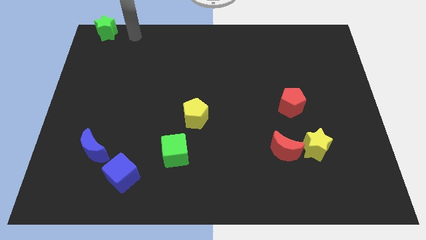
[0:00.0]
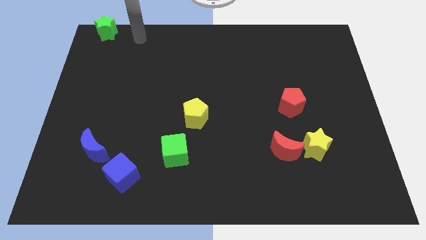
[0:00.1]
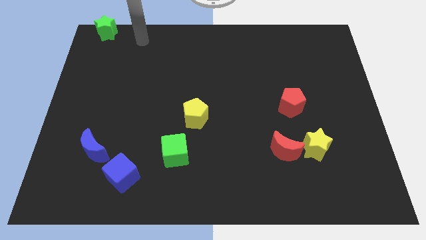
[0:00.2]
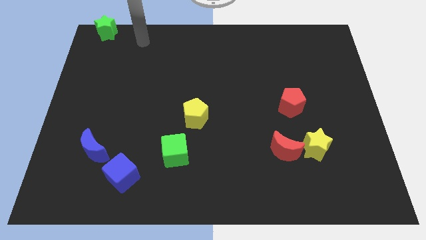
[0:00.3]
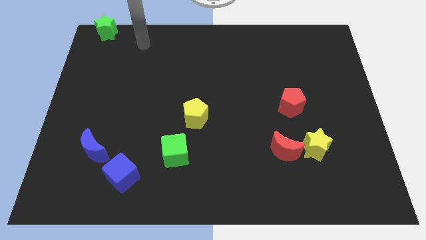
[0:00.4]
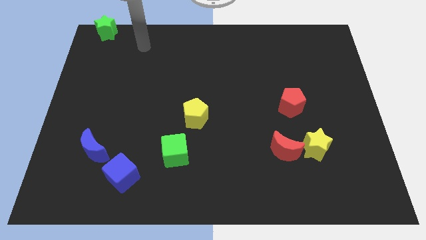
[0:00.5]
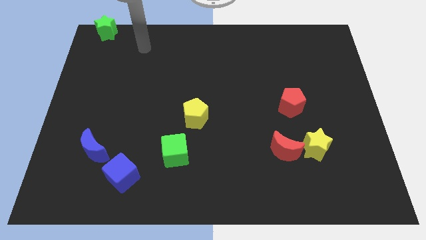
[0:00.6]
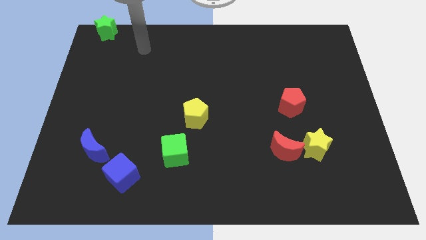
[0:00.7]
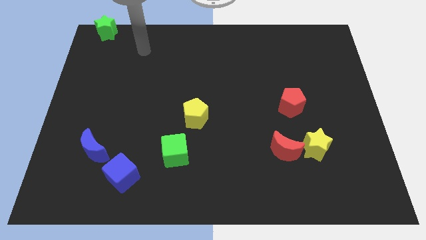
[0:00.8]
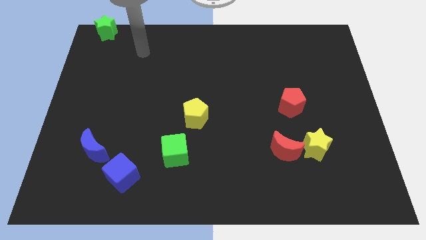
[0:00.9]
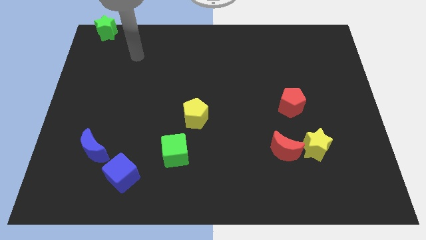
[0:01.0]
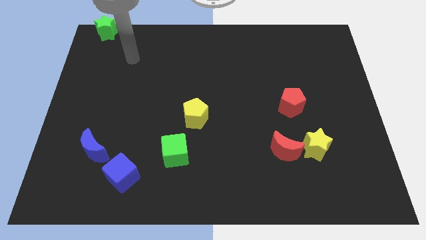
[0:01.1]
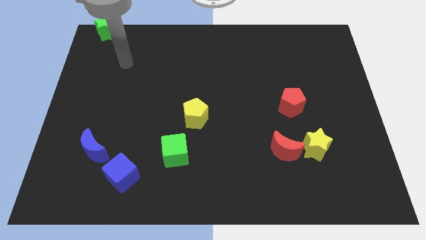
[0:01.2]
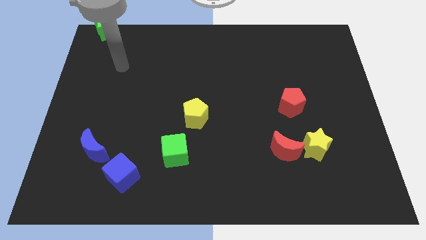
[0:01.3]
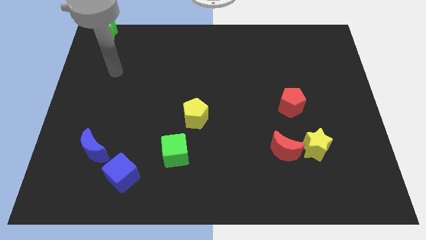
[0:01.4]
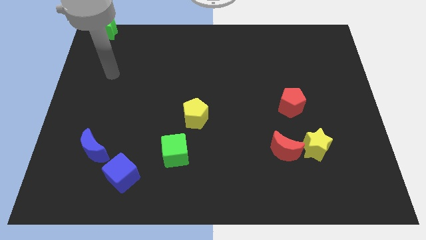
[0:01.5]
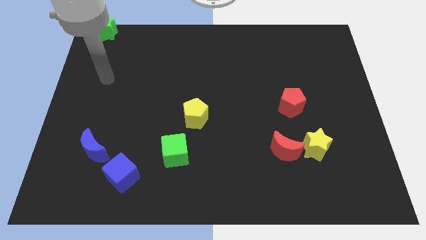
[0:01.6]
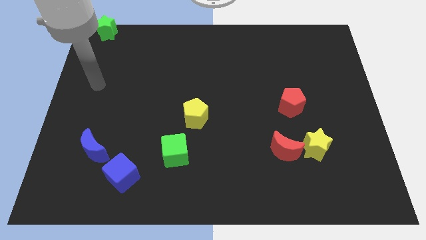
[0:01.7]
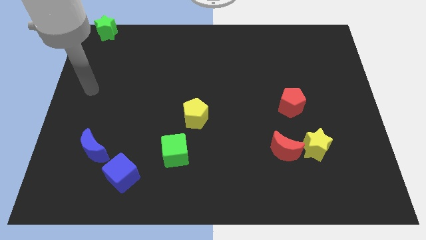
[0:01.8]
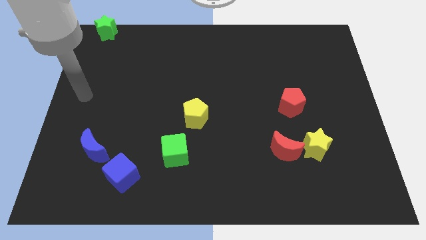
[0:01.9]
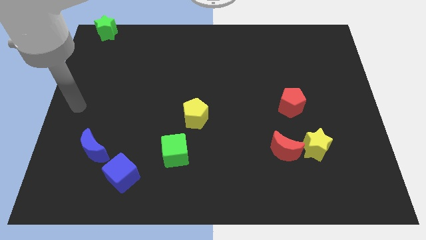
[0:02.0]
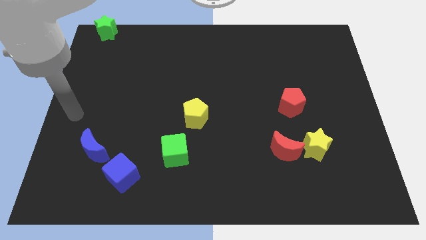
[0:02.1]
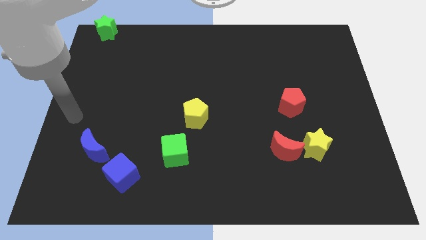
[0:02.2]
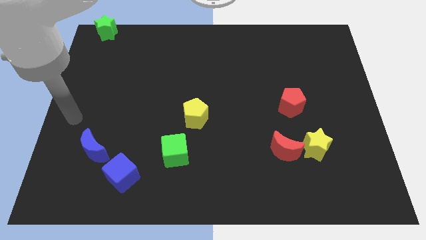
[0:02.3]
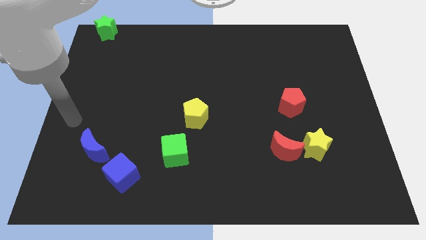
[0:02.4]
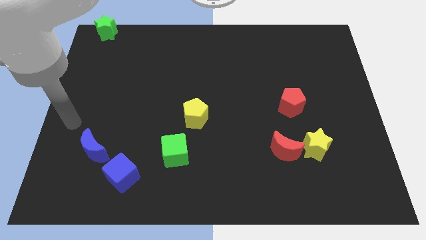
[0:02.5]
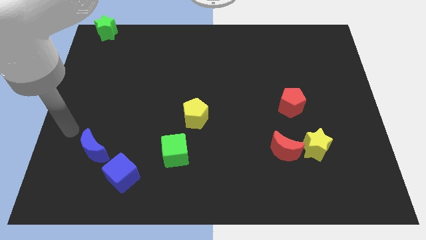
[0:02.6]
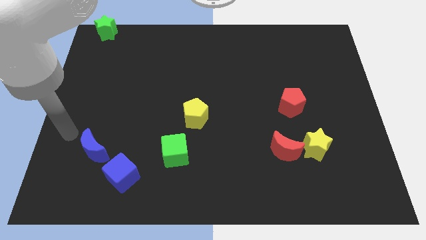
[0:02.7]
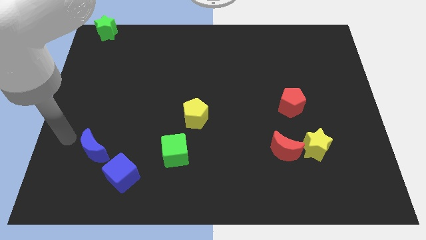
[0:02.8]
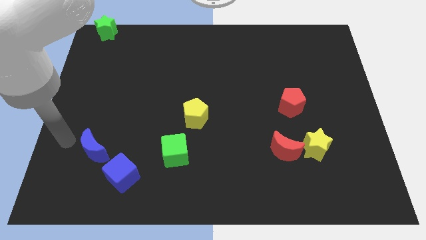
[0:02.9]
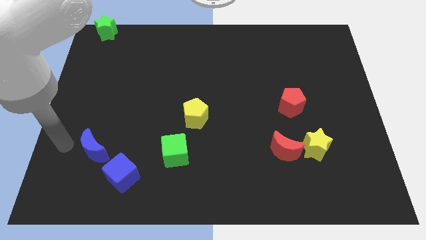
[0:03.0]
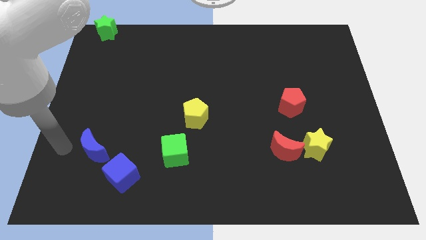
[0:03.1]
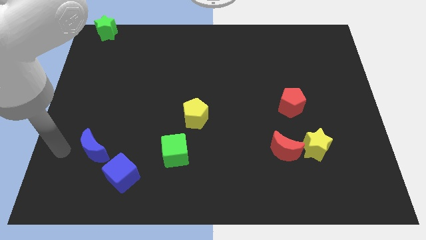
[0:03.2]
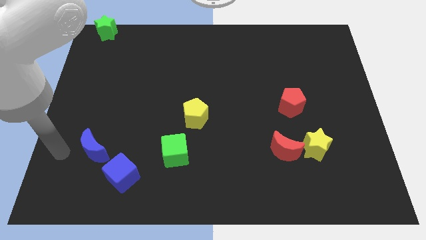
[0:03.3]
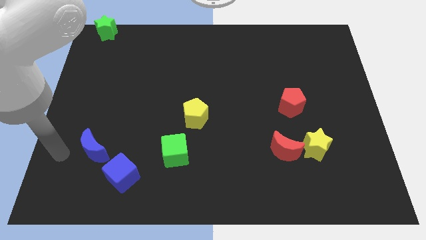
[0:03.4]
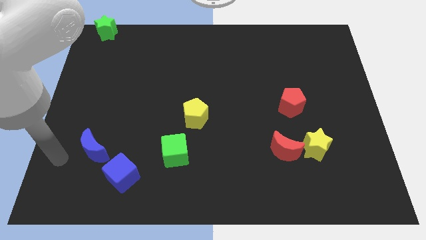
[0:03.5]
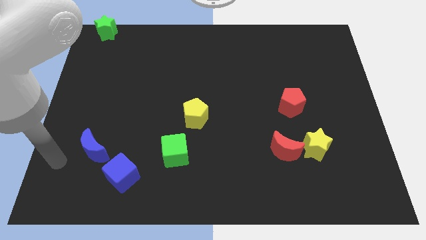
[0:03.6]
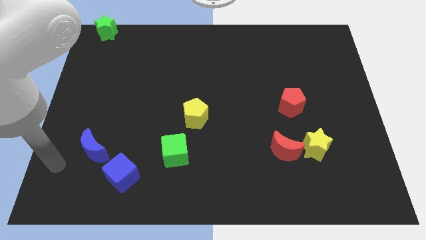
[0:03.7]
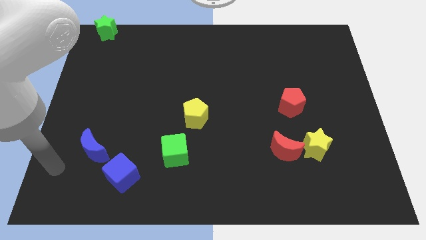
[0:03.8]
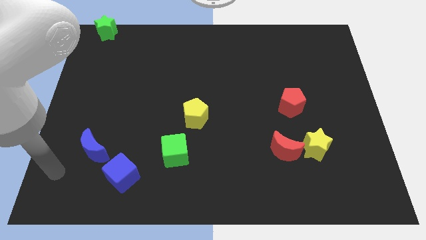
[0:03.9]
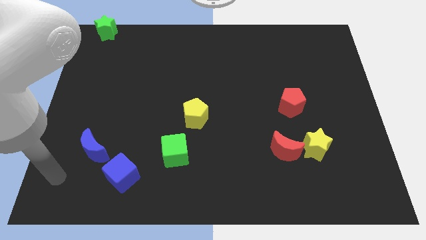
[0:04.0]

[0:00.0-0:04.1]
point the arm to the left of the blue cube

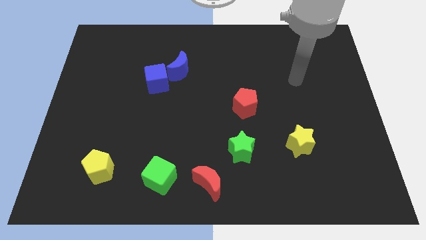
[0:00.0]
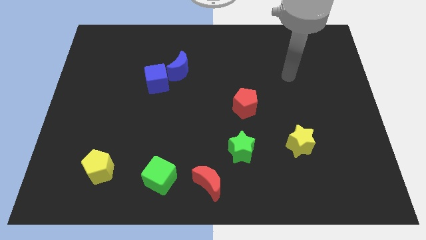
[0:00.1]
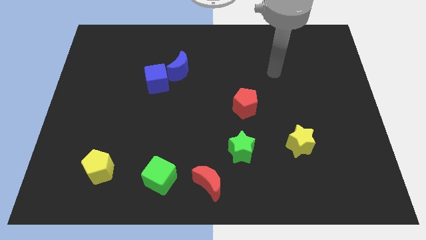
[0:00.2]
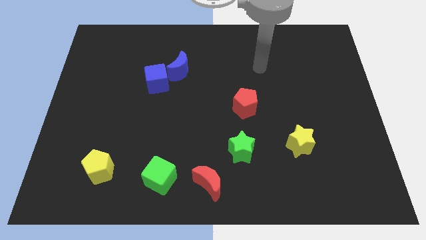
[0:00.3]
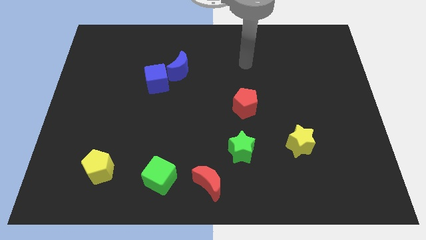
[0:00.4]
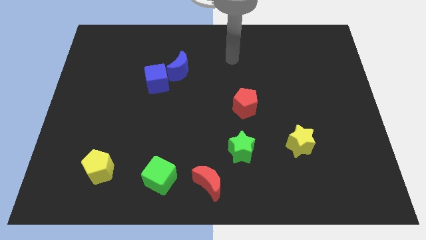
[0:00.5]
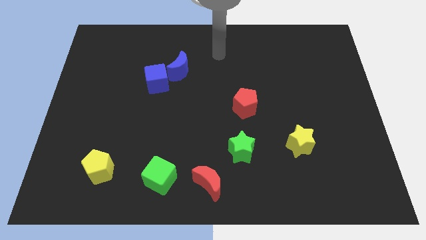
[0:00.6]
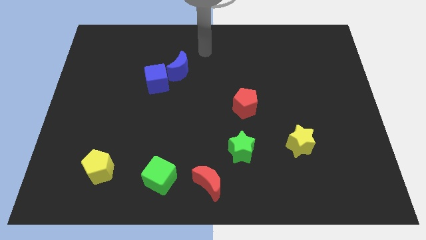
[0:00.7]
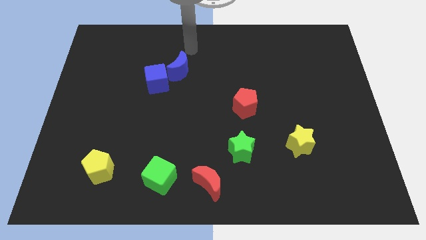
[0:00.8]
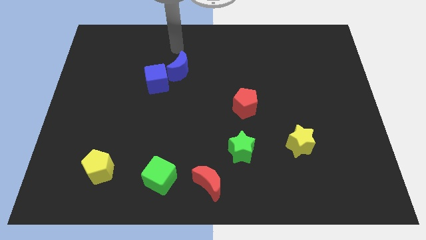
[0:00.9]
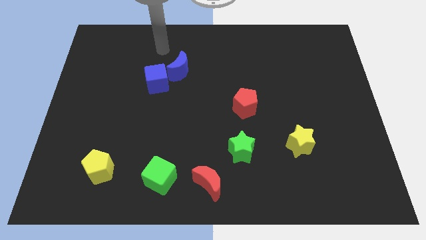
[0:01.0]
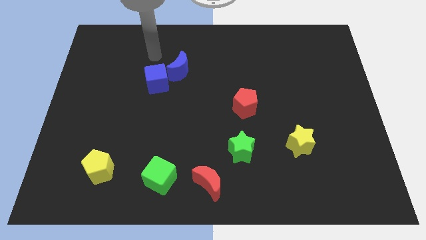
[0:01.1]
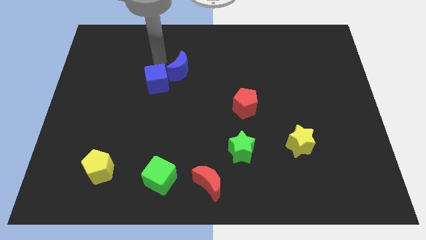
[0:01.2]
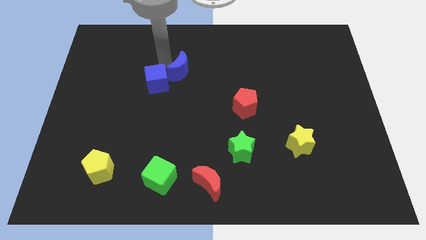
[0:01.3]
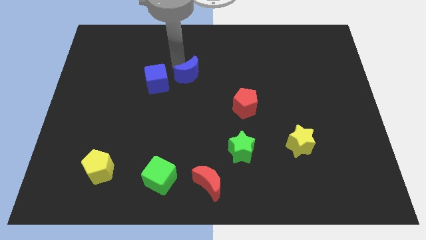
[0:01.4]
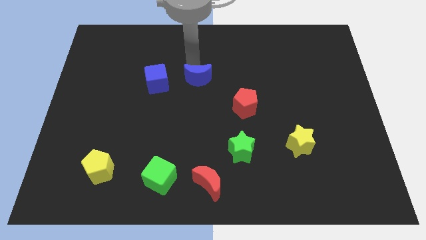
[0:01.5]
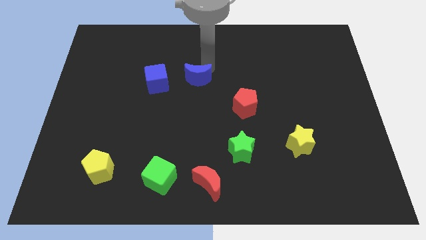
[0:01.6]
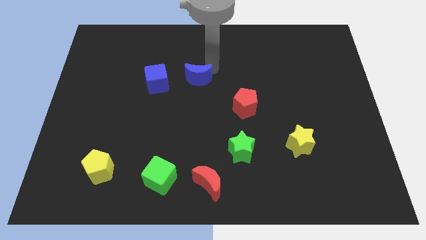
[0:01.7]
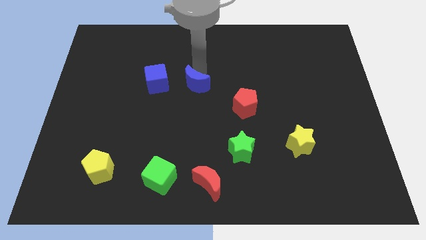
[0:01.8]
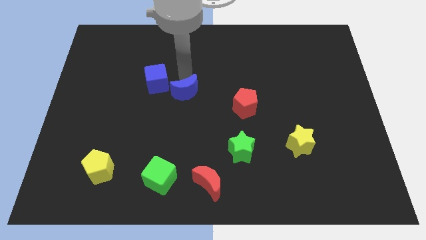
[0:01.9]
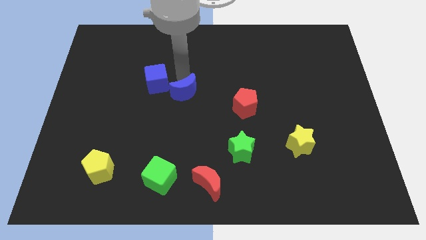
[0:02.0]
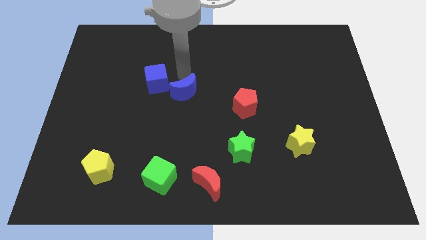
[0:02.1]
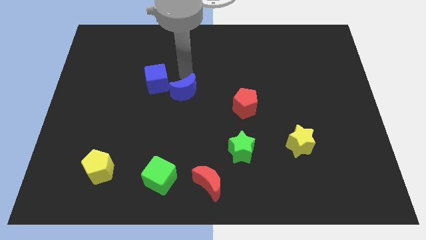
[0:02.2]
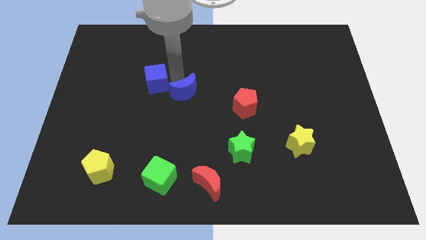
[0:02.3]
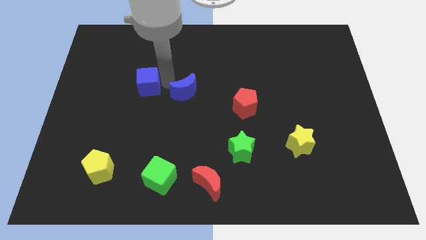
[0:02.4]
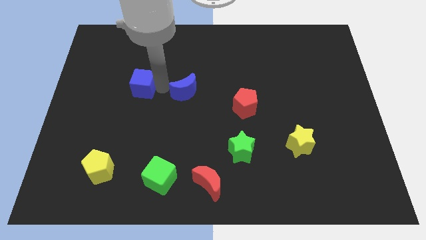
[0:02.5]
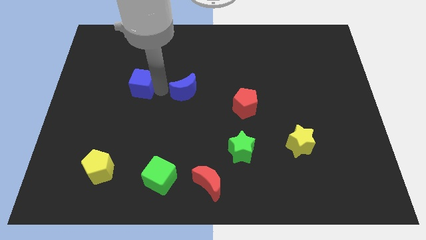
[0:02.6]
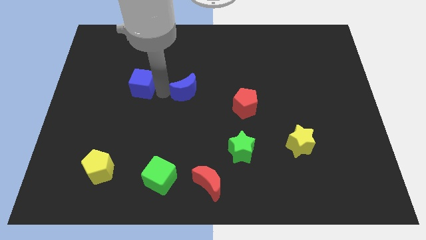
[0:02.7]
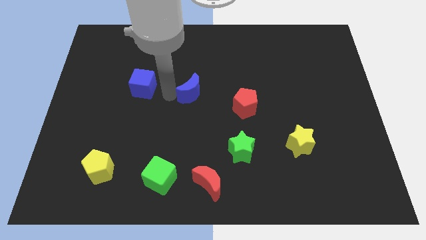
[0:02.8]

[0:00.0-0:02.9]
separate the blue crescent and blue cube

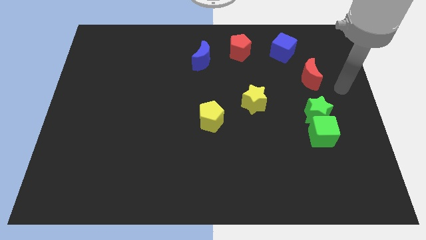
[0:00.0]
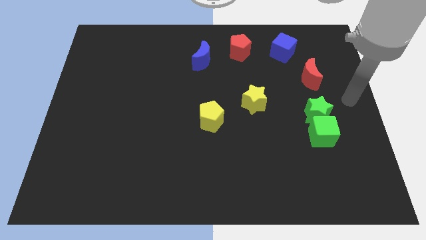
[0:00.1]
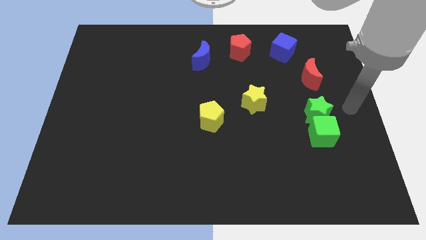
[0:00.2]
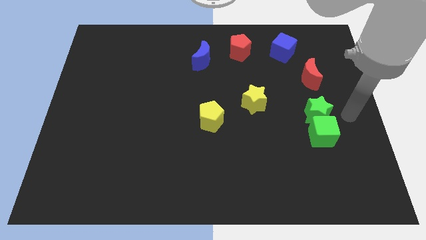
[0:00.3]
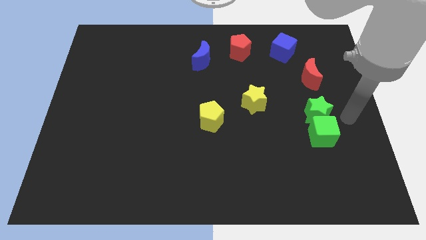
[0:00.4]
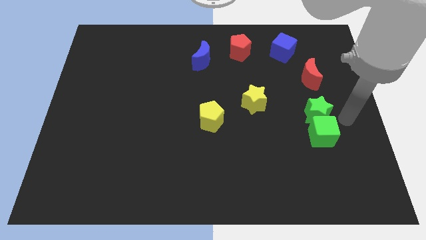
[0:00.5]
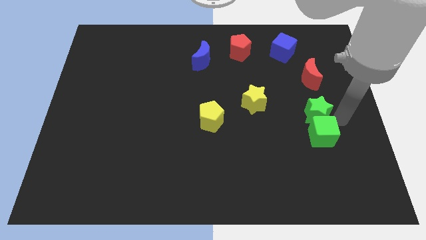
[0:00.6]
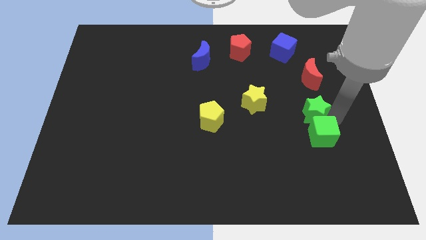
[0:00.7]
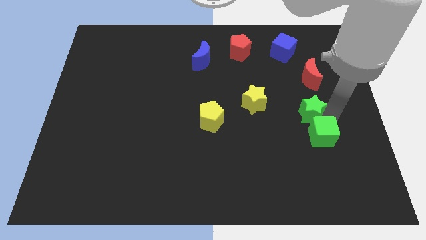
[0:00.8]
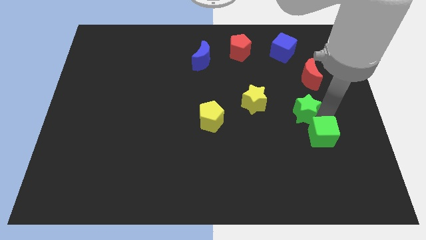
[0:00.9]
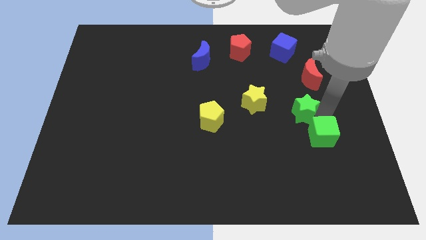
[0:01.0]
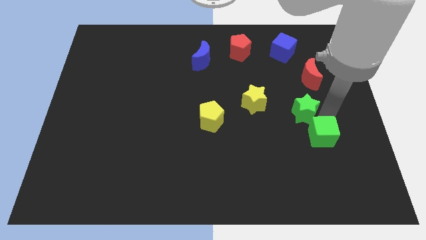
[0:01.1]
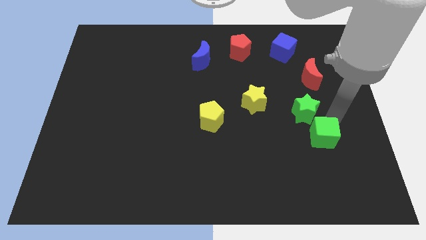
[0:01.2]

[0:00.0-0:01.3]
slide the green star to the top left side of the green cube

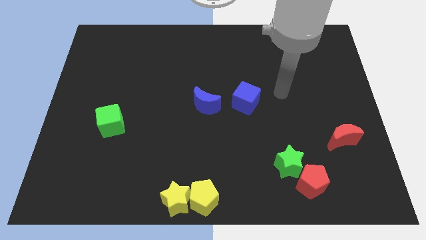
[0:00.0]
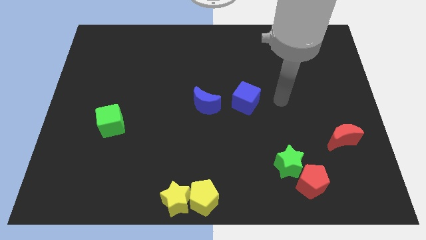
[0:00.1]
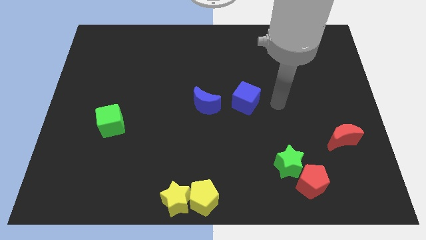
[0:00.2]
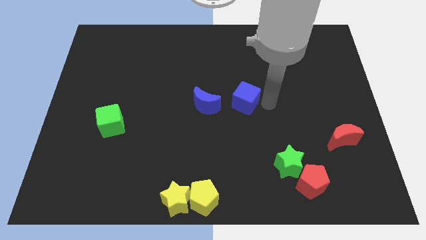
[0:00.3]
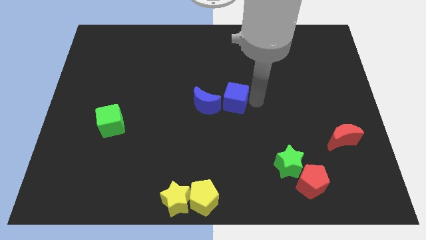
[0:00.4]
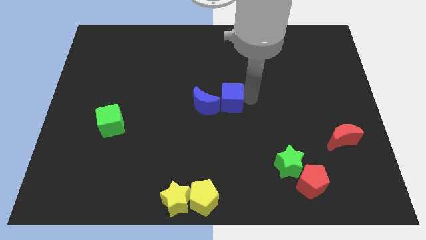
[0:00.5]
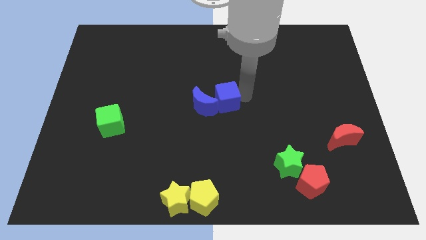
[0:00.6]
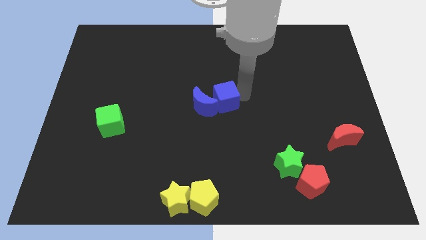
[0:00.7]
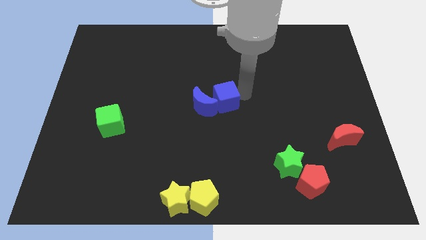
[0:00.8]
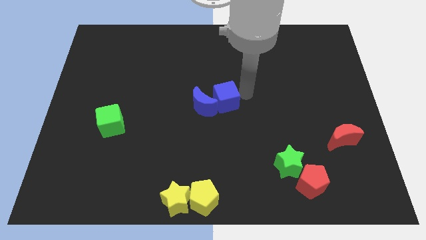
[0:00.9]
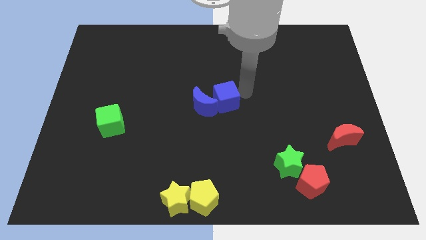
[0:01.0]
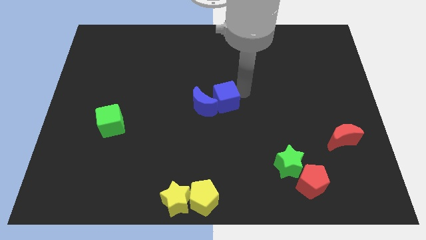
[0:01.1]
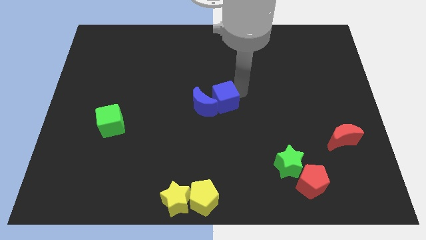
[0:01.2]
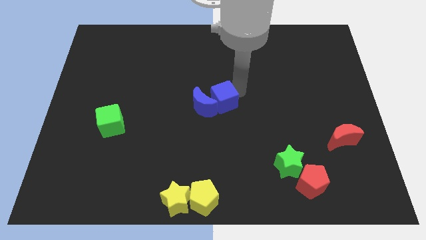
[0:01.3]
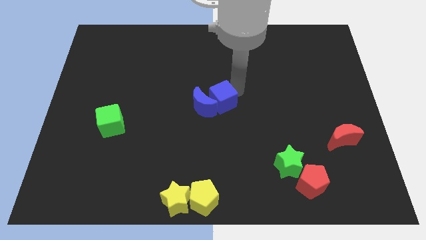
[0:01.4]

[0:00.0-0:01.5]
move the blue cube to the right of the blue moon
